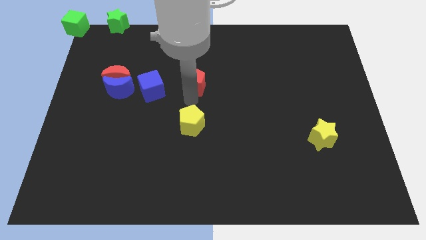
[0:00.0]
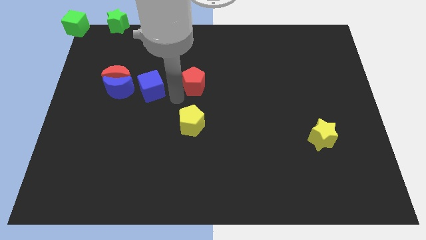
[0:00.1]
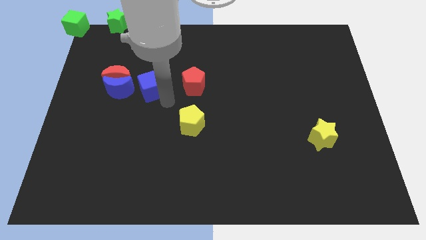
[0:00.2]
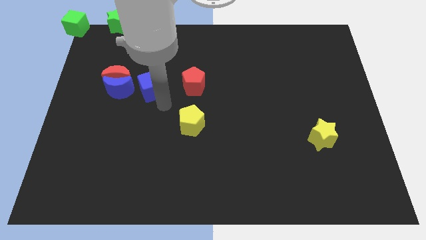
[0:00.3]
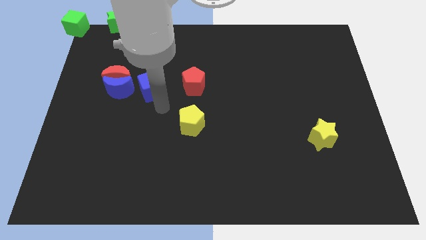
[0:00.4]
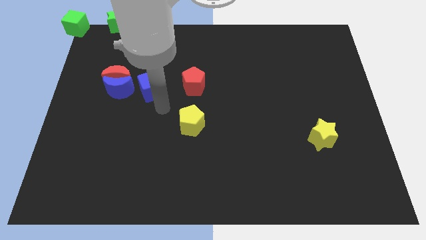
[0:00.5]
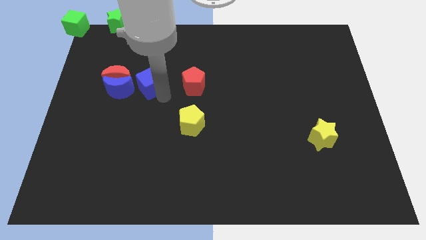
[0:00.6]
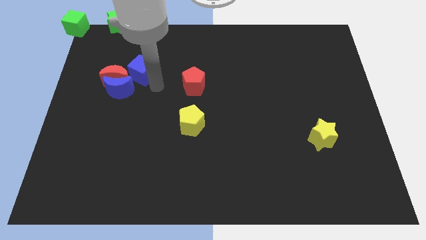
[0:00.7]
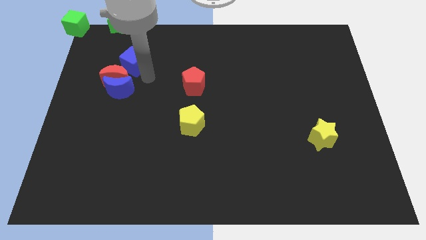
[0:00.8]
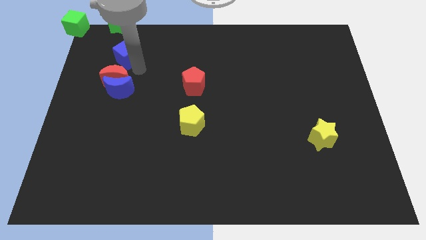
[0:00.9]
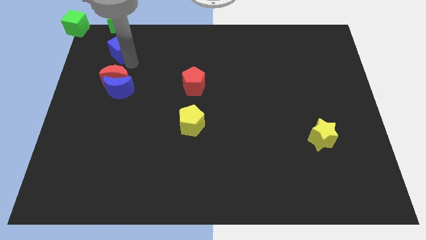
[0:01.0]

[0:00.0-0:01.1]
move blue cube diagonally upwards

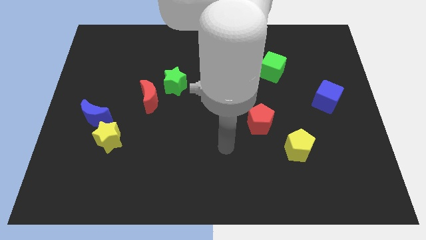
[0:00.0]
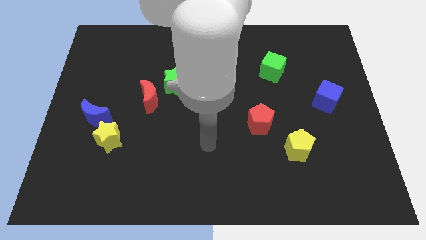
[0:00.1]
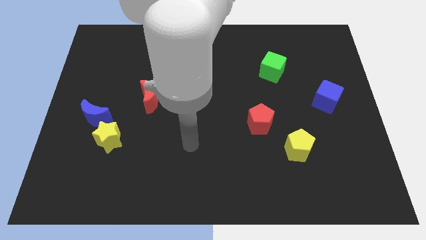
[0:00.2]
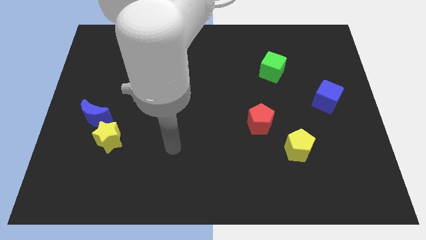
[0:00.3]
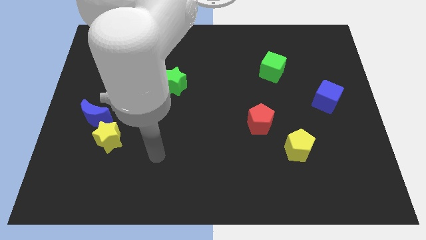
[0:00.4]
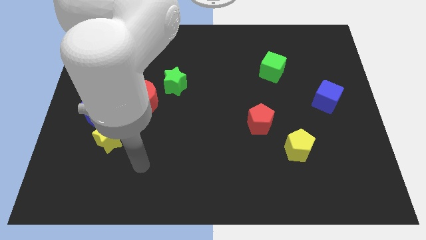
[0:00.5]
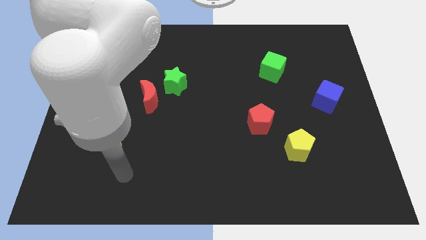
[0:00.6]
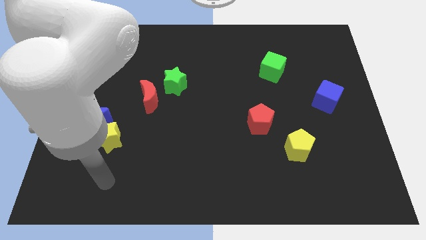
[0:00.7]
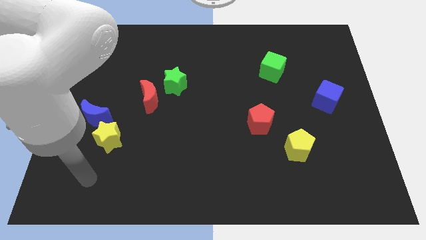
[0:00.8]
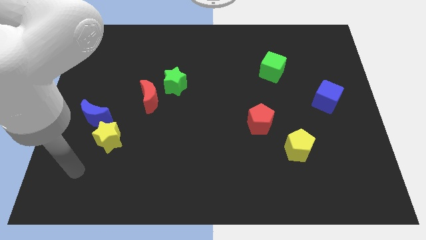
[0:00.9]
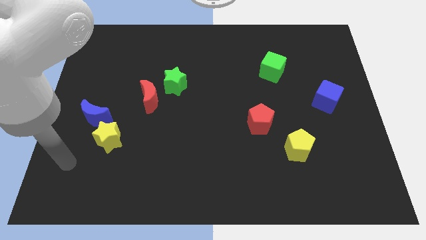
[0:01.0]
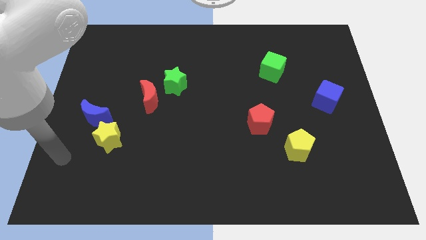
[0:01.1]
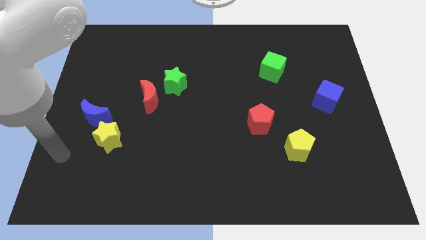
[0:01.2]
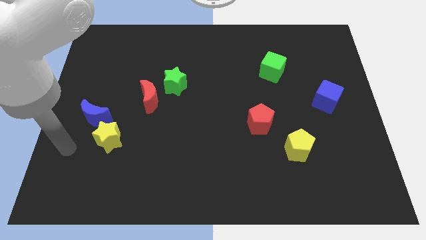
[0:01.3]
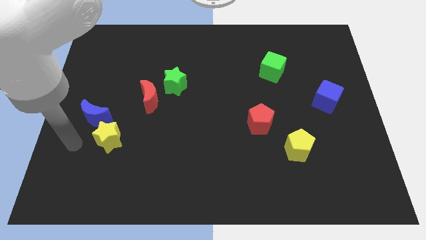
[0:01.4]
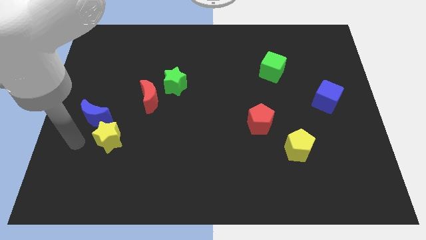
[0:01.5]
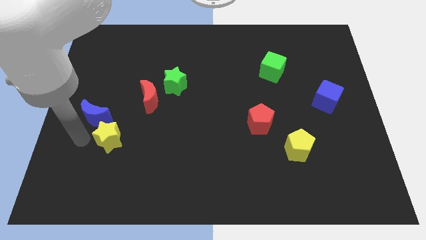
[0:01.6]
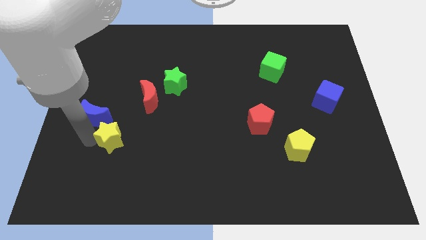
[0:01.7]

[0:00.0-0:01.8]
place the arm to the left of the yellow star

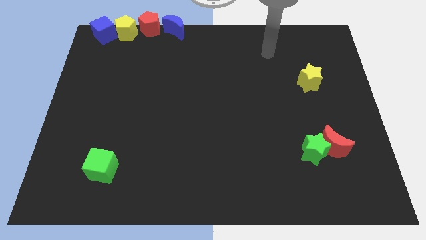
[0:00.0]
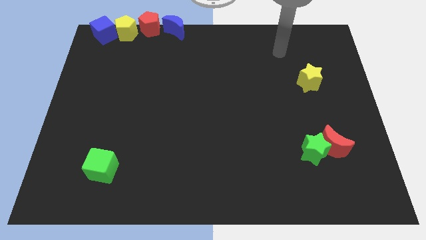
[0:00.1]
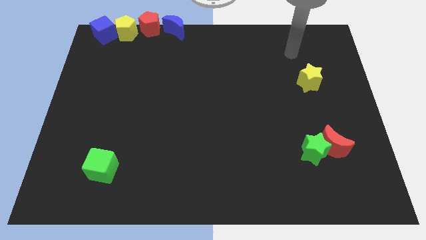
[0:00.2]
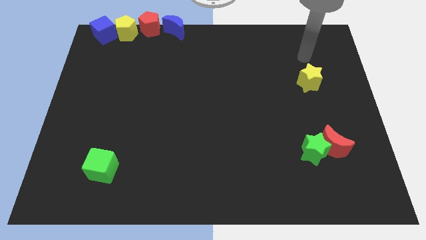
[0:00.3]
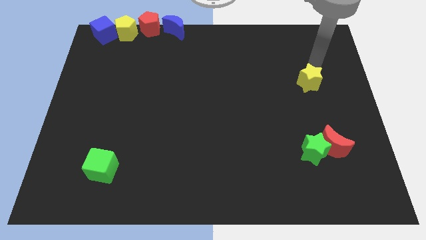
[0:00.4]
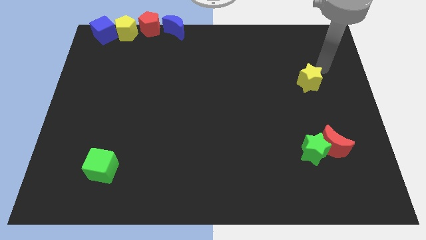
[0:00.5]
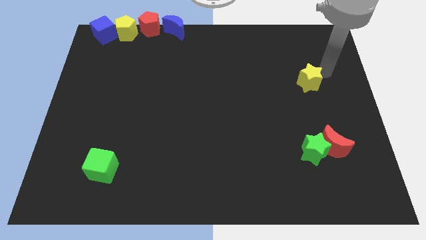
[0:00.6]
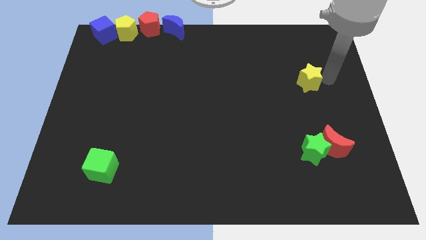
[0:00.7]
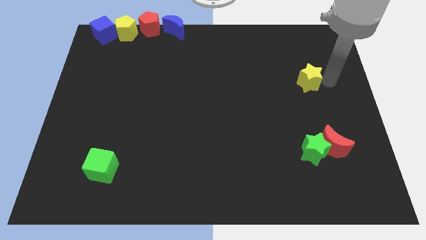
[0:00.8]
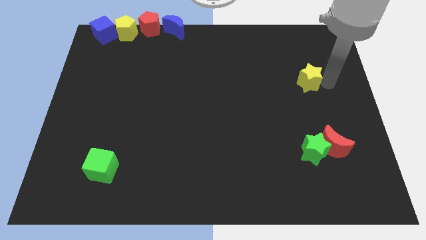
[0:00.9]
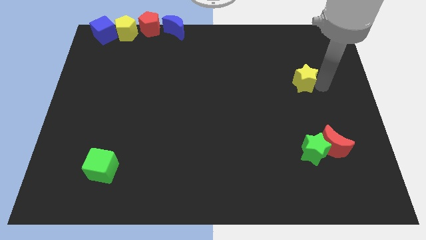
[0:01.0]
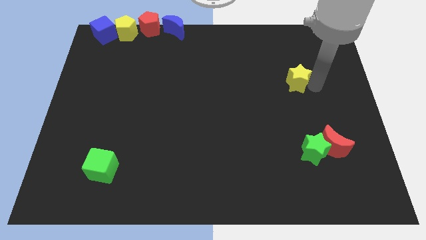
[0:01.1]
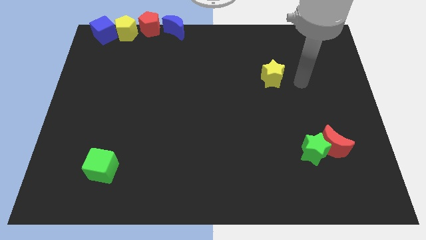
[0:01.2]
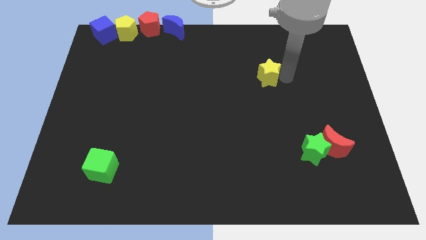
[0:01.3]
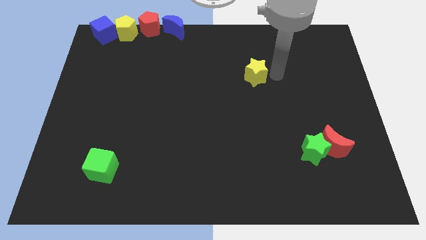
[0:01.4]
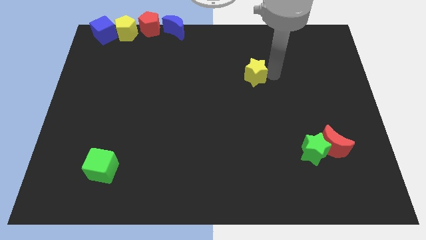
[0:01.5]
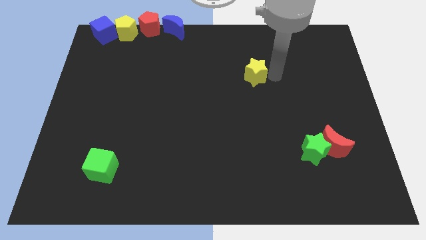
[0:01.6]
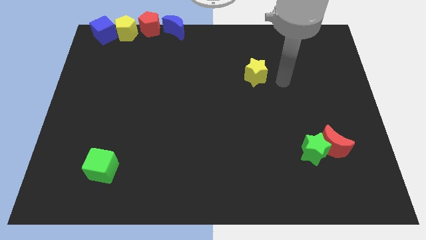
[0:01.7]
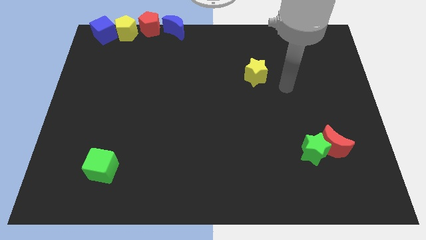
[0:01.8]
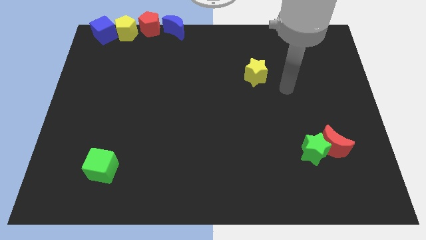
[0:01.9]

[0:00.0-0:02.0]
push the yellow star slightly to the left

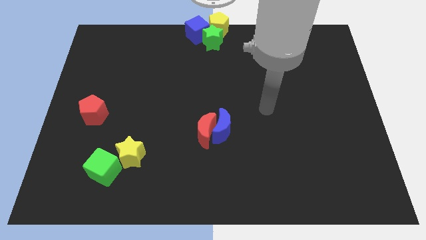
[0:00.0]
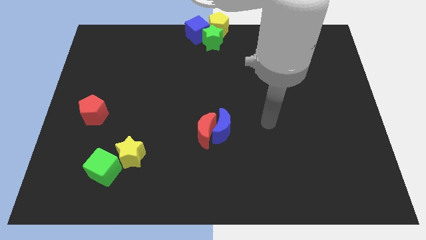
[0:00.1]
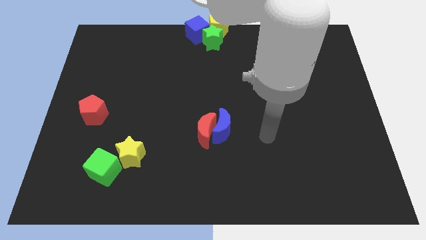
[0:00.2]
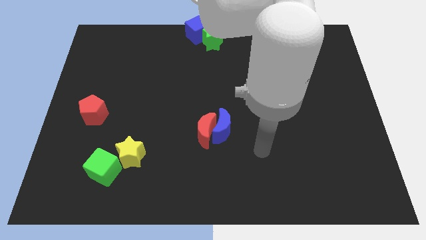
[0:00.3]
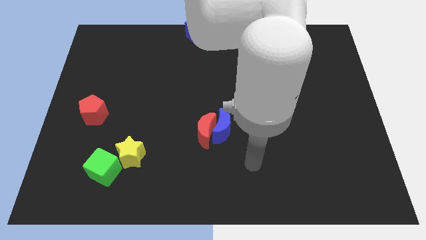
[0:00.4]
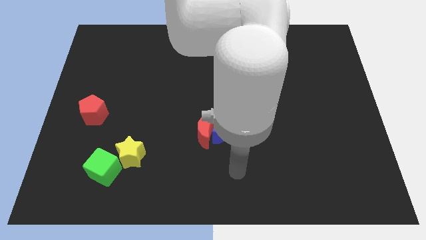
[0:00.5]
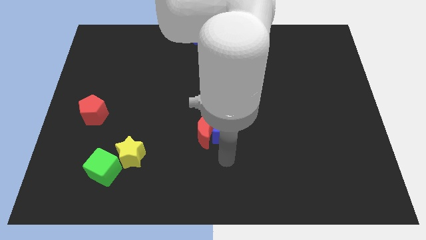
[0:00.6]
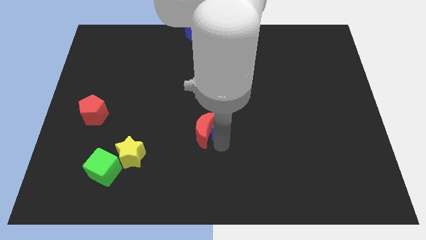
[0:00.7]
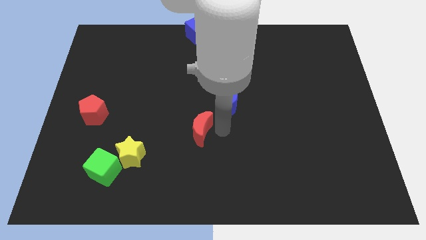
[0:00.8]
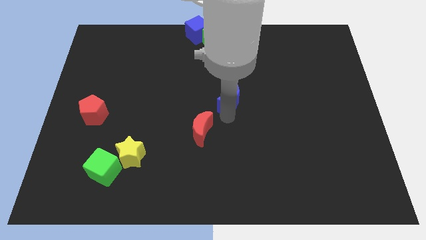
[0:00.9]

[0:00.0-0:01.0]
separate blue moon and red moon

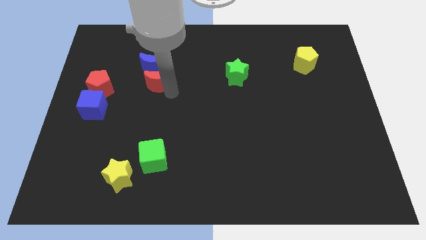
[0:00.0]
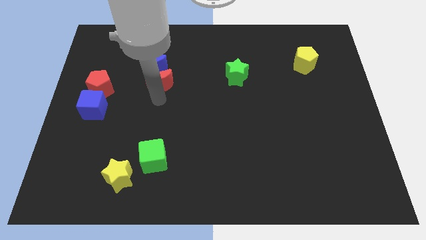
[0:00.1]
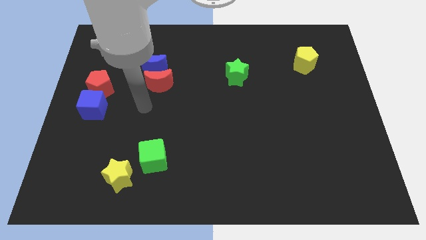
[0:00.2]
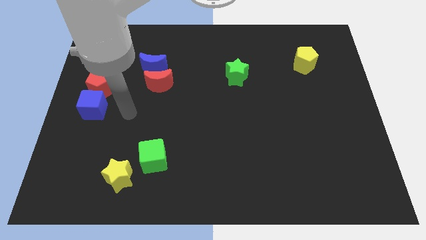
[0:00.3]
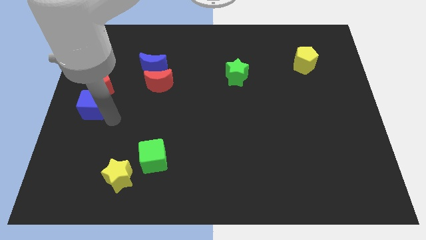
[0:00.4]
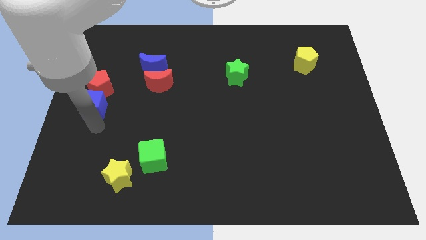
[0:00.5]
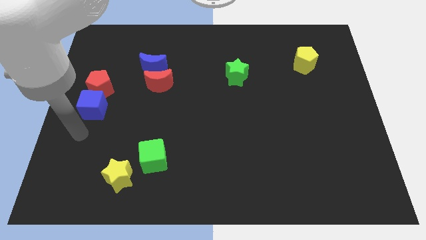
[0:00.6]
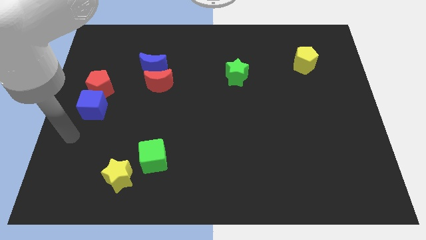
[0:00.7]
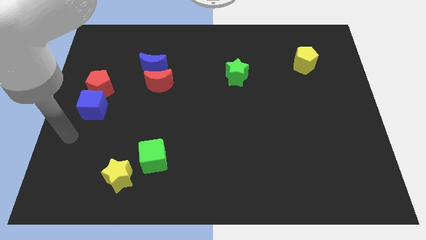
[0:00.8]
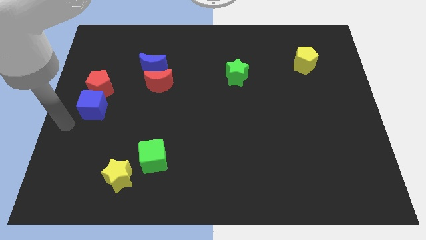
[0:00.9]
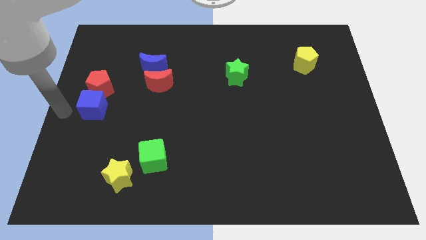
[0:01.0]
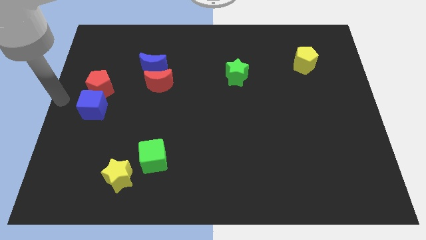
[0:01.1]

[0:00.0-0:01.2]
point your arm at the left of the blue cube

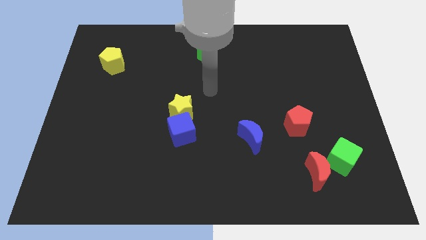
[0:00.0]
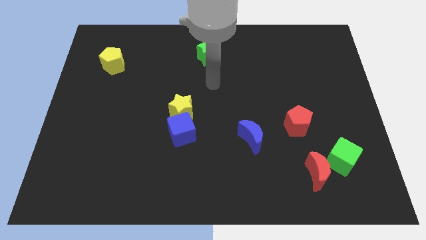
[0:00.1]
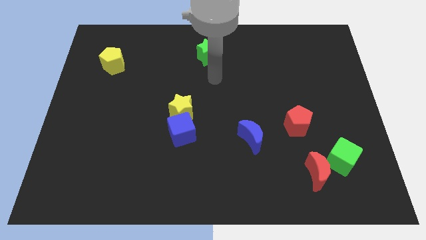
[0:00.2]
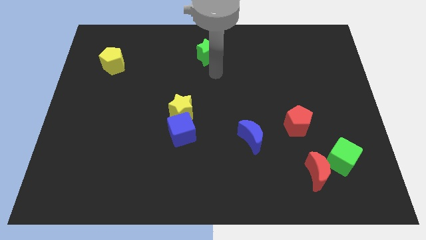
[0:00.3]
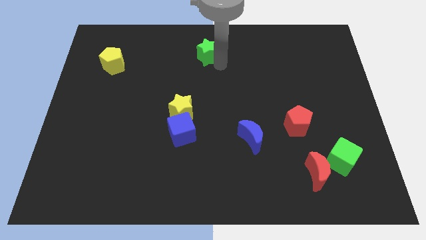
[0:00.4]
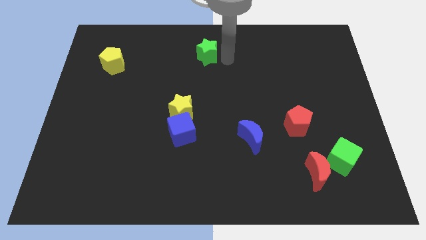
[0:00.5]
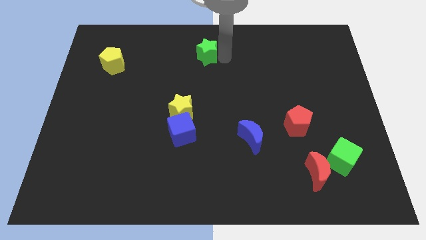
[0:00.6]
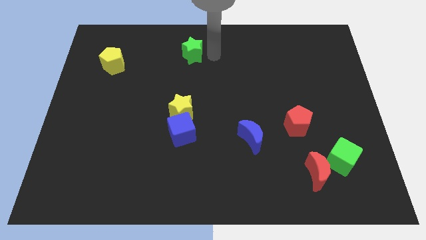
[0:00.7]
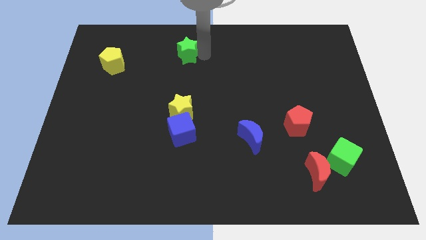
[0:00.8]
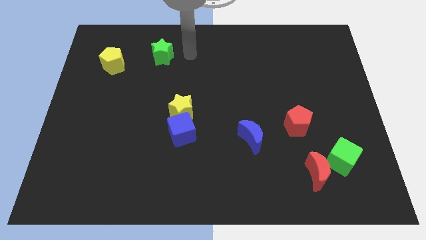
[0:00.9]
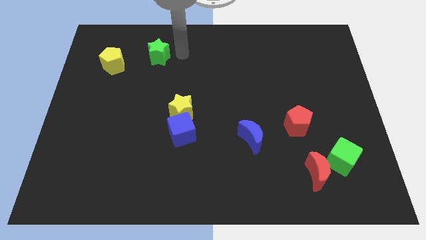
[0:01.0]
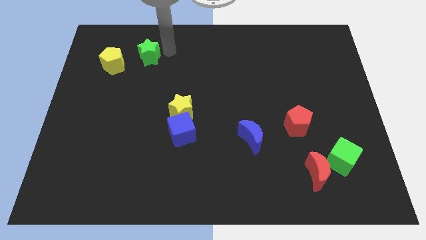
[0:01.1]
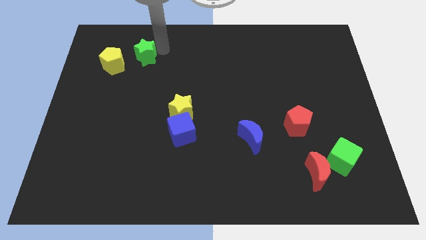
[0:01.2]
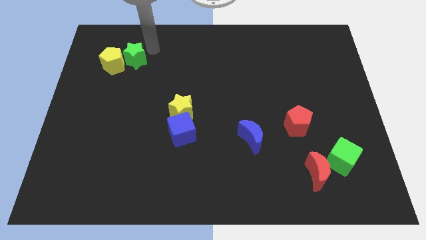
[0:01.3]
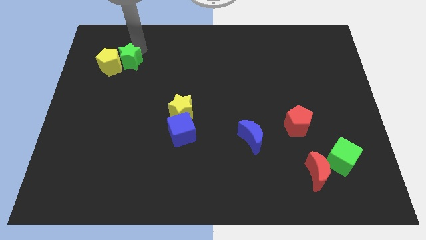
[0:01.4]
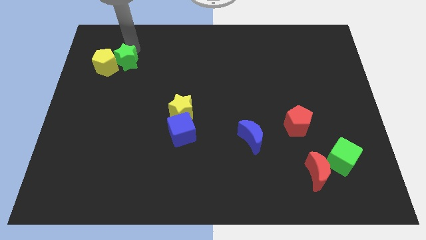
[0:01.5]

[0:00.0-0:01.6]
move the green star to the right side of the yellow pentagon

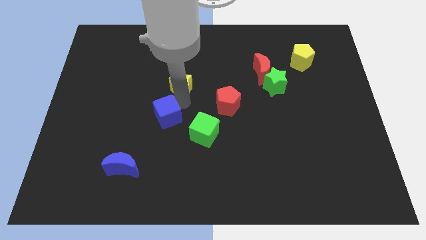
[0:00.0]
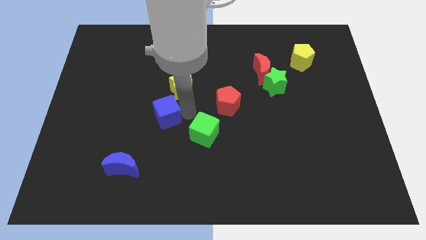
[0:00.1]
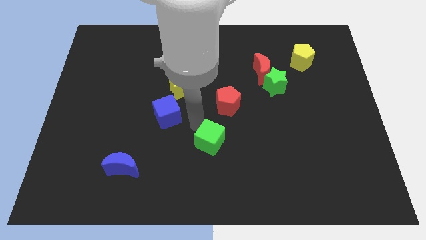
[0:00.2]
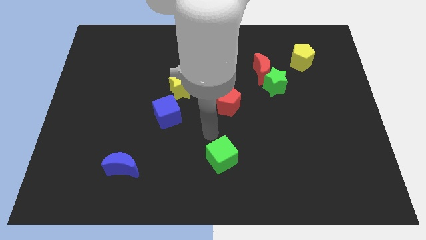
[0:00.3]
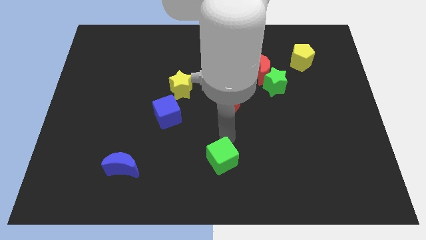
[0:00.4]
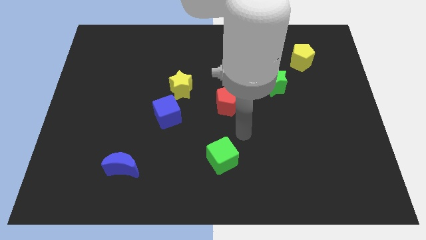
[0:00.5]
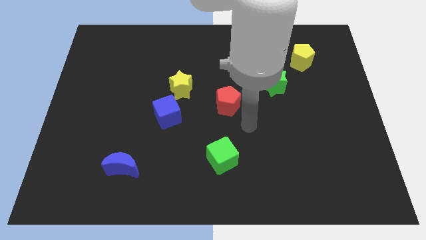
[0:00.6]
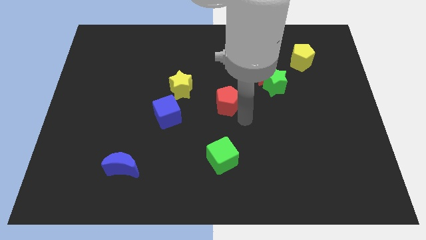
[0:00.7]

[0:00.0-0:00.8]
push the green cube downwards
